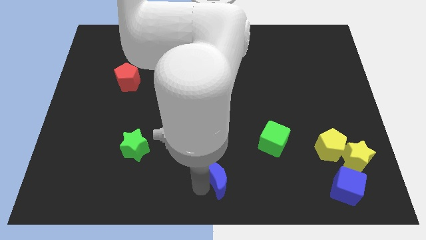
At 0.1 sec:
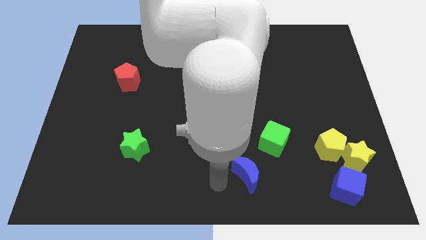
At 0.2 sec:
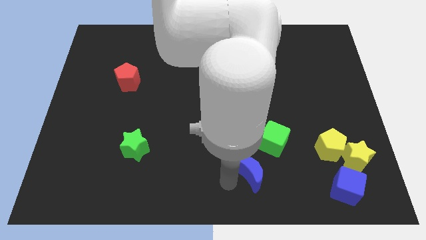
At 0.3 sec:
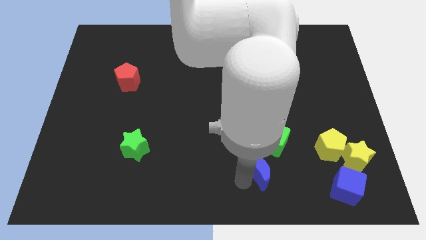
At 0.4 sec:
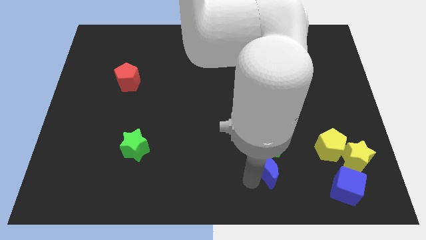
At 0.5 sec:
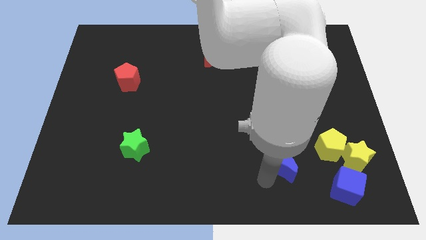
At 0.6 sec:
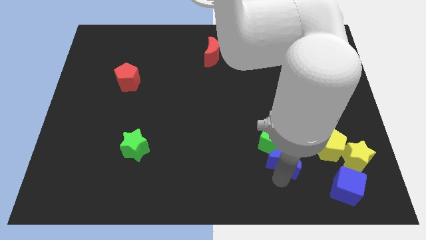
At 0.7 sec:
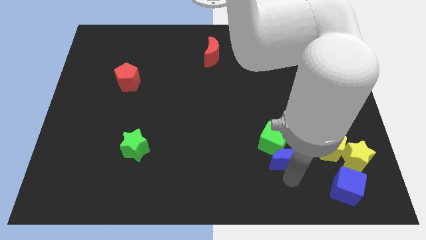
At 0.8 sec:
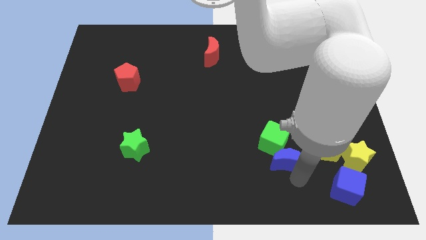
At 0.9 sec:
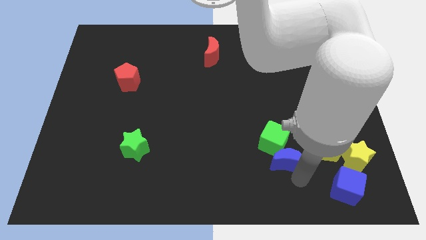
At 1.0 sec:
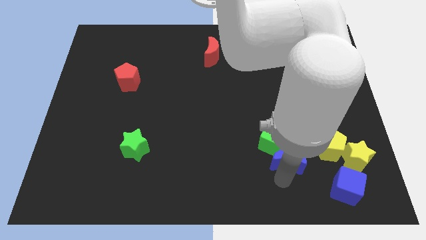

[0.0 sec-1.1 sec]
place the blue crescent below the green cube

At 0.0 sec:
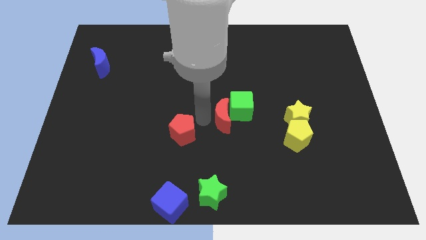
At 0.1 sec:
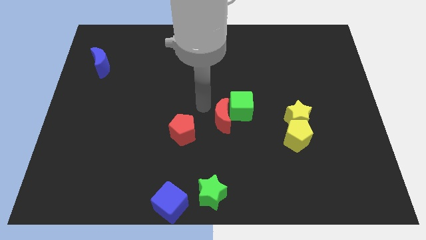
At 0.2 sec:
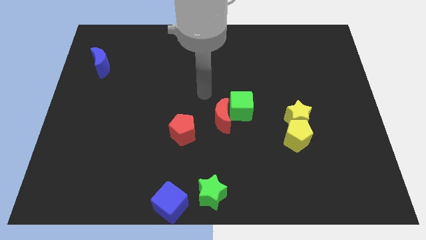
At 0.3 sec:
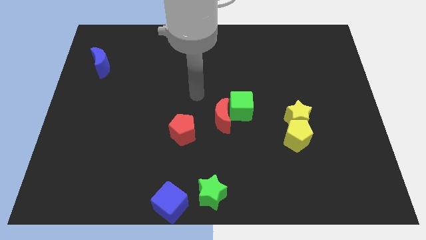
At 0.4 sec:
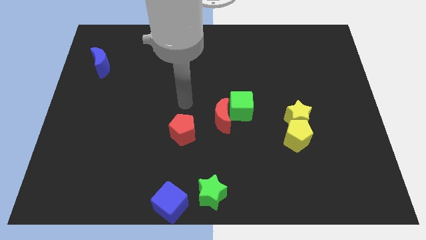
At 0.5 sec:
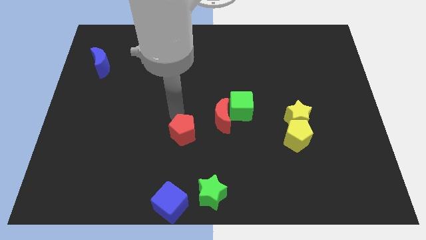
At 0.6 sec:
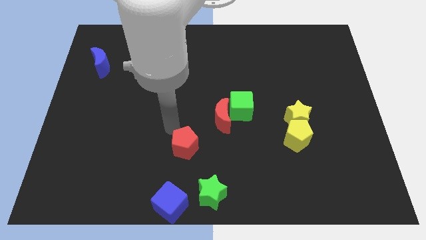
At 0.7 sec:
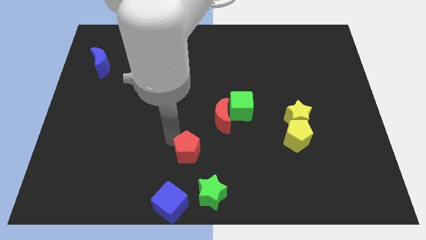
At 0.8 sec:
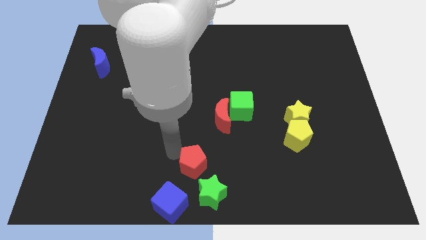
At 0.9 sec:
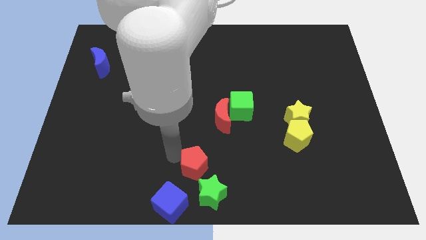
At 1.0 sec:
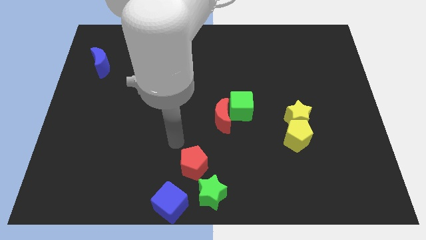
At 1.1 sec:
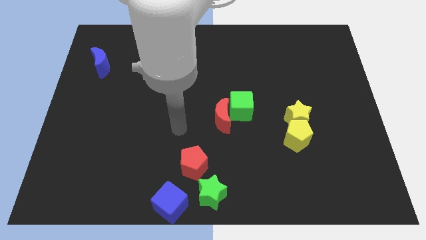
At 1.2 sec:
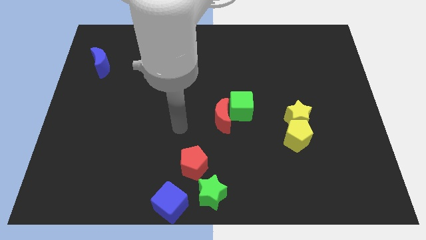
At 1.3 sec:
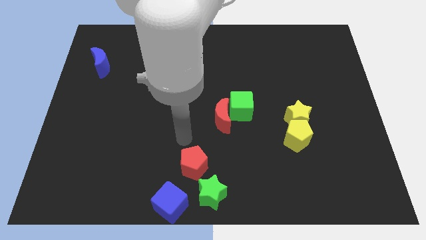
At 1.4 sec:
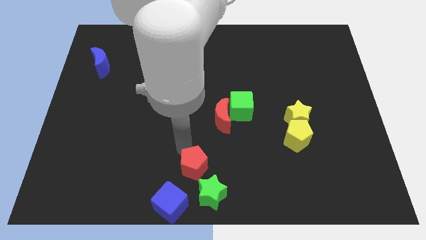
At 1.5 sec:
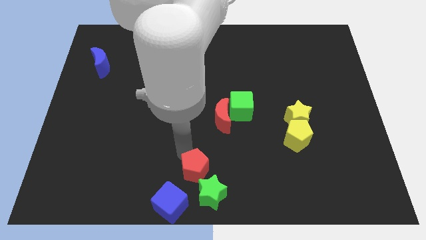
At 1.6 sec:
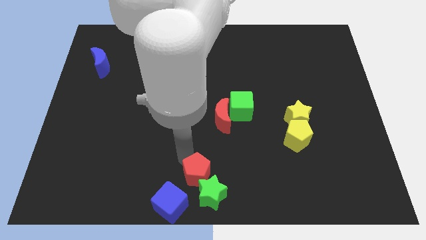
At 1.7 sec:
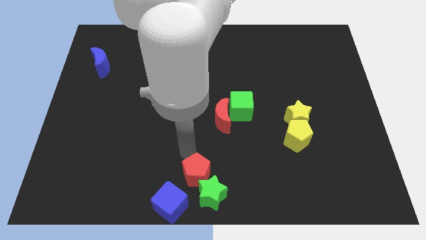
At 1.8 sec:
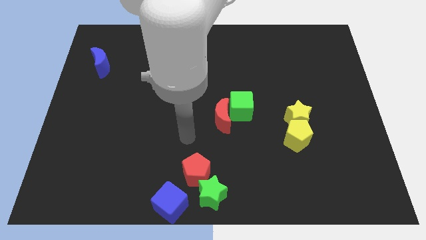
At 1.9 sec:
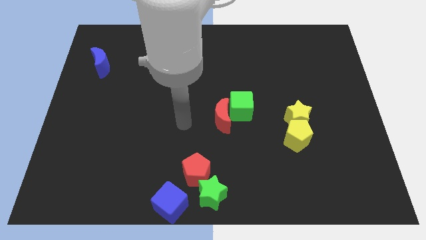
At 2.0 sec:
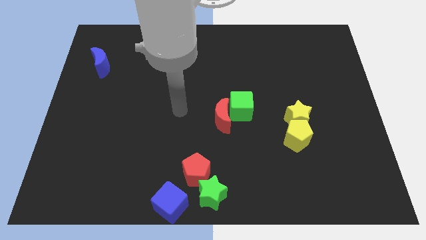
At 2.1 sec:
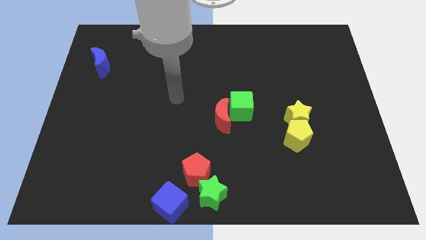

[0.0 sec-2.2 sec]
move the red pentagon above the green star

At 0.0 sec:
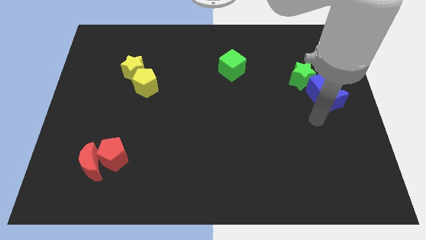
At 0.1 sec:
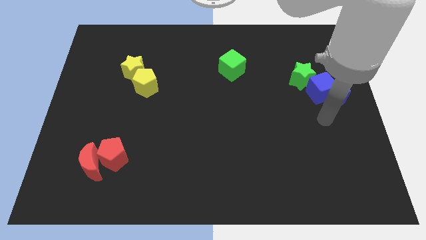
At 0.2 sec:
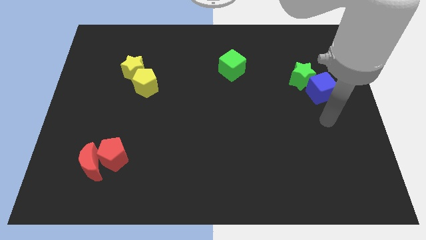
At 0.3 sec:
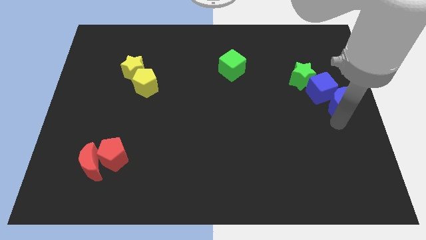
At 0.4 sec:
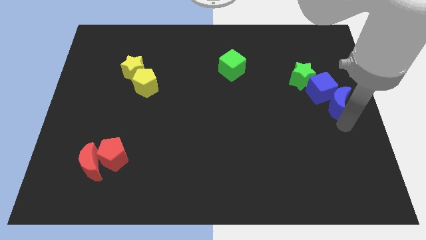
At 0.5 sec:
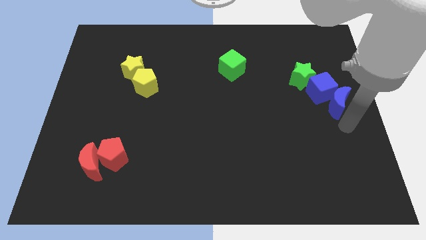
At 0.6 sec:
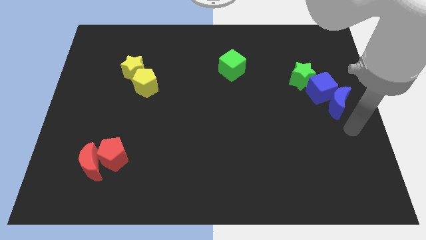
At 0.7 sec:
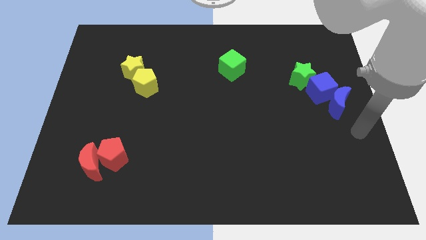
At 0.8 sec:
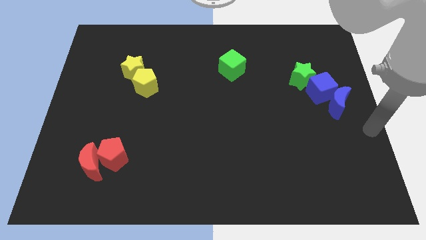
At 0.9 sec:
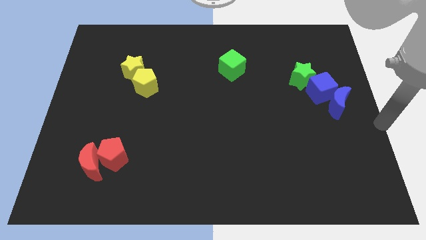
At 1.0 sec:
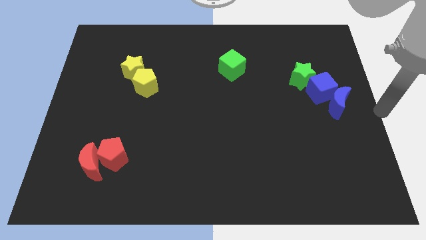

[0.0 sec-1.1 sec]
slide the blue moon to the bottom right side of the blue cube

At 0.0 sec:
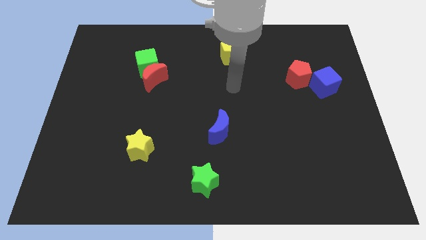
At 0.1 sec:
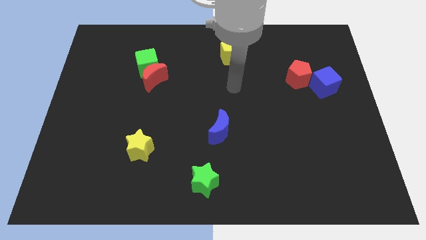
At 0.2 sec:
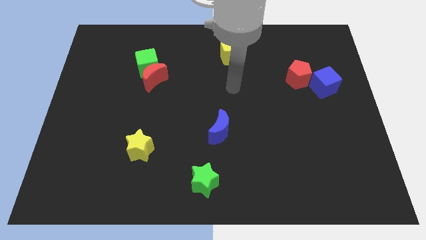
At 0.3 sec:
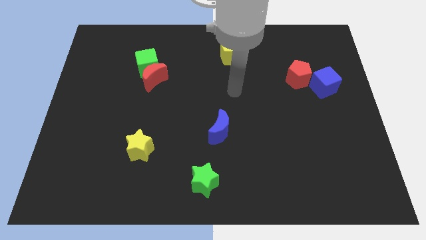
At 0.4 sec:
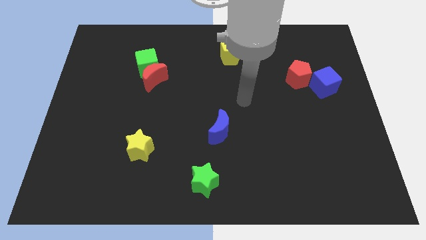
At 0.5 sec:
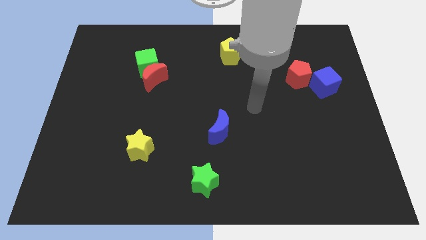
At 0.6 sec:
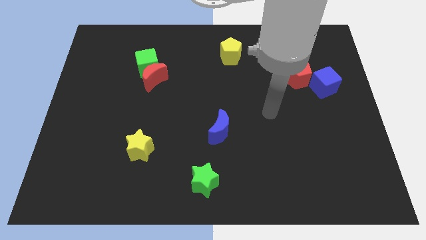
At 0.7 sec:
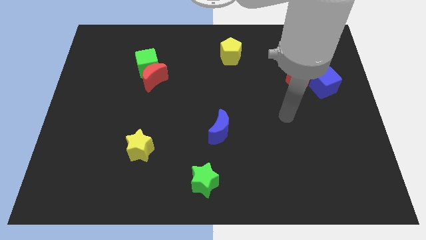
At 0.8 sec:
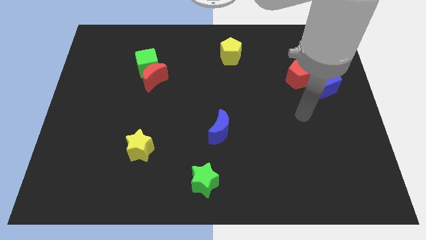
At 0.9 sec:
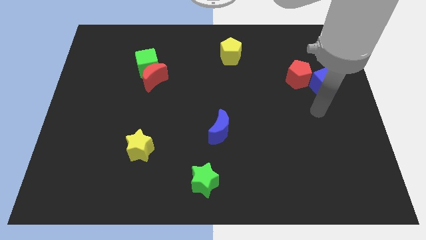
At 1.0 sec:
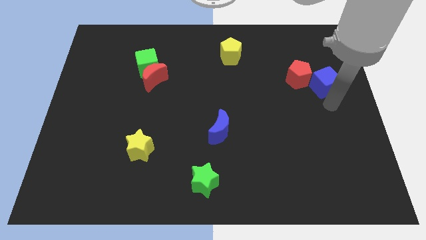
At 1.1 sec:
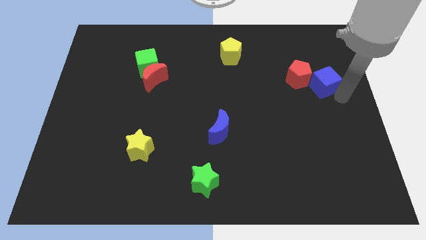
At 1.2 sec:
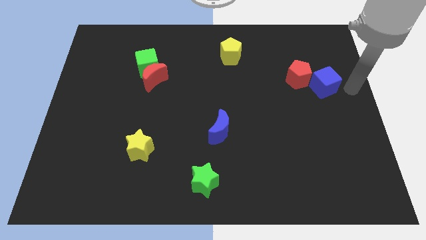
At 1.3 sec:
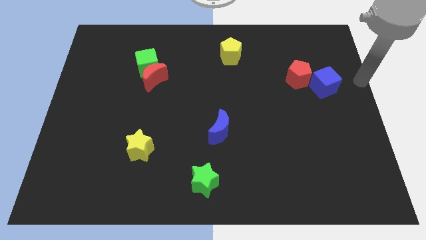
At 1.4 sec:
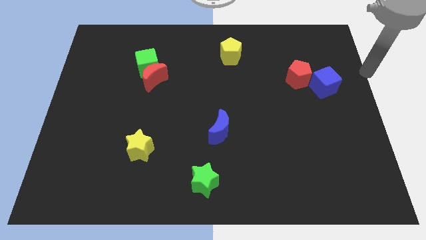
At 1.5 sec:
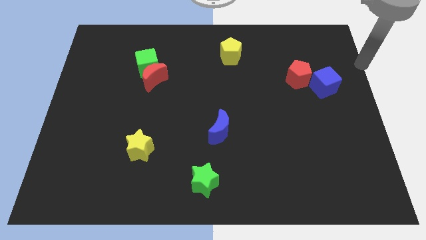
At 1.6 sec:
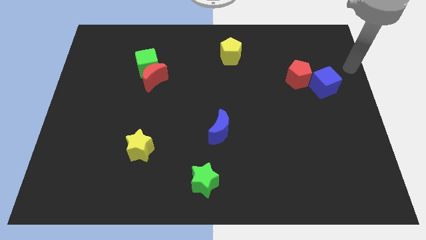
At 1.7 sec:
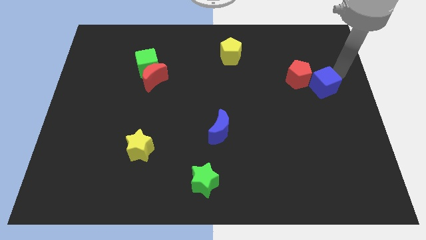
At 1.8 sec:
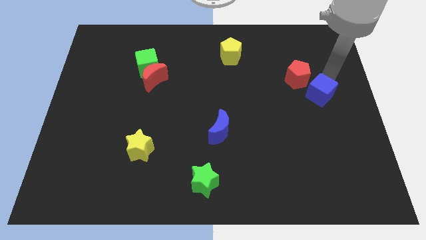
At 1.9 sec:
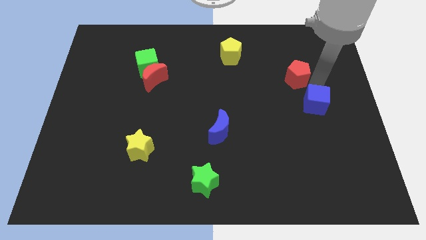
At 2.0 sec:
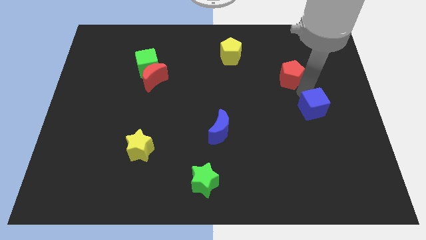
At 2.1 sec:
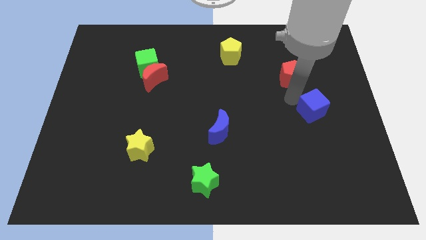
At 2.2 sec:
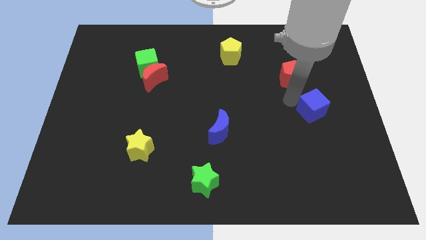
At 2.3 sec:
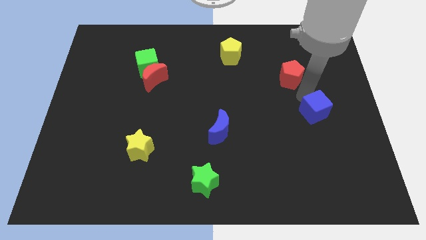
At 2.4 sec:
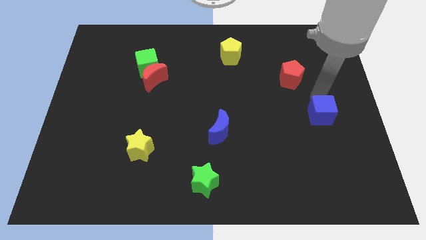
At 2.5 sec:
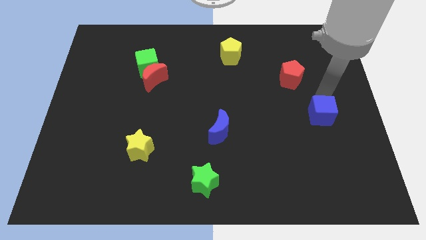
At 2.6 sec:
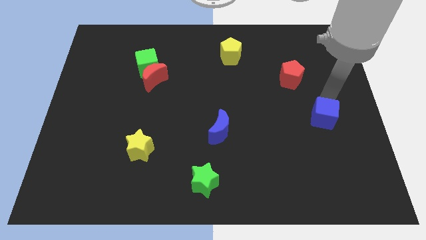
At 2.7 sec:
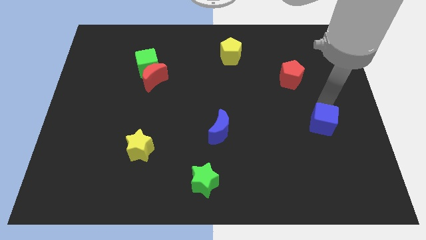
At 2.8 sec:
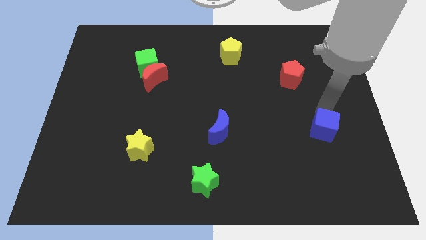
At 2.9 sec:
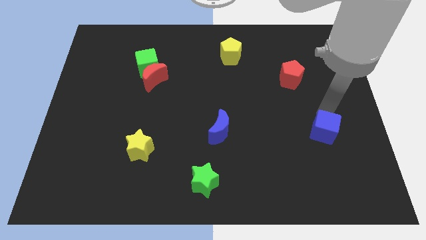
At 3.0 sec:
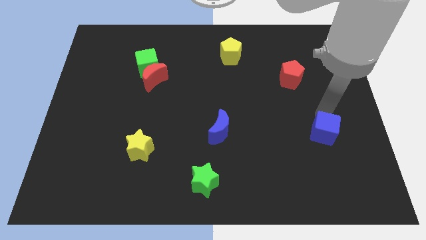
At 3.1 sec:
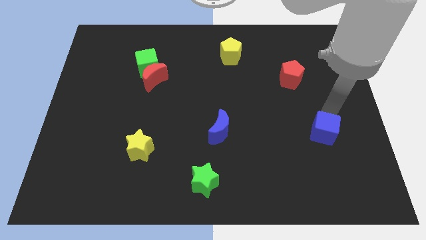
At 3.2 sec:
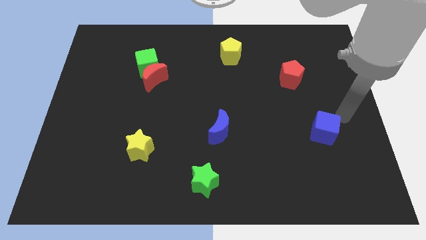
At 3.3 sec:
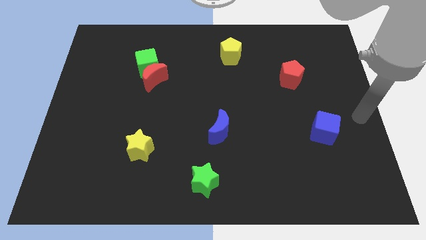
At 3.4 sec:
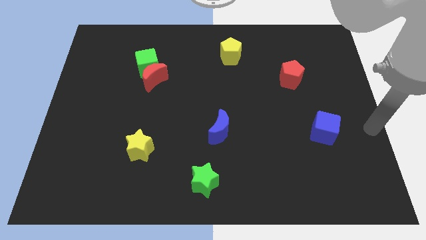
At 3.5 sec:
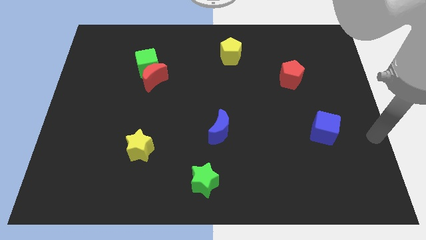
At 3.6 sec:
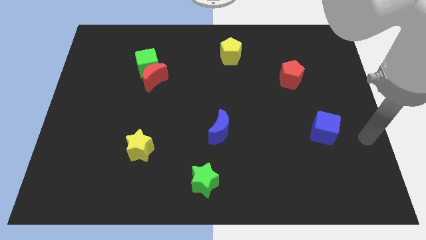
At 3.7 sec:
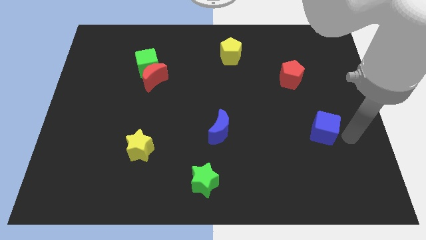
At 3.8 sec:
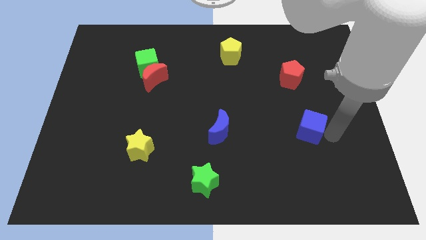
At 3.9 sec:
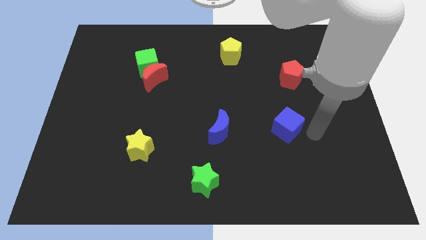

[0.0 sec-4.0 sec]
place blue cube vertical to red pentagon

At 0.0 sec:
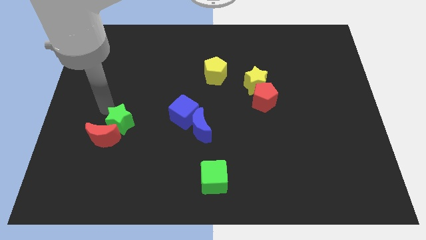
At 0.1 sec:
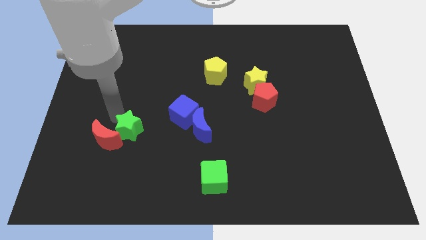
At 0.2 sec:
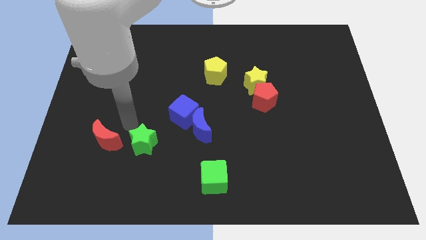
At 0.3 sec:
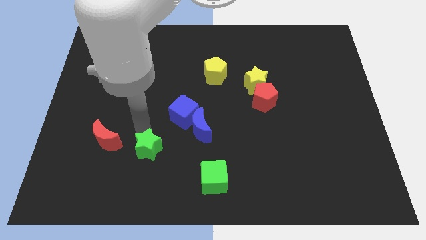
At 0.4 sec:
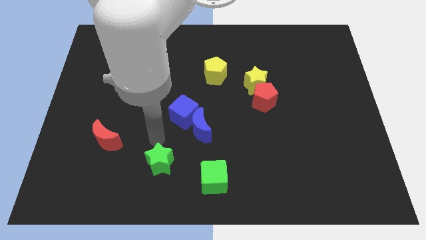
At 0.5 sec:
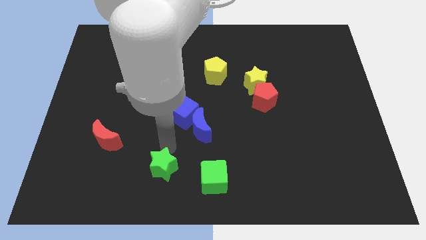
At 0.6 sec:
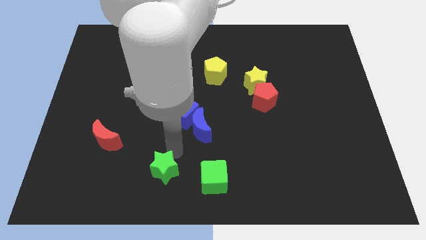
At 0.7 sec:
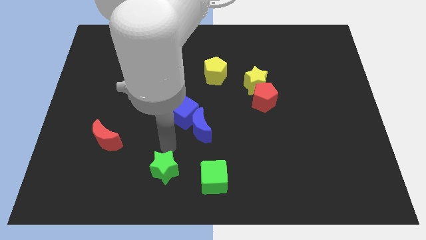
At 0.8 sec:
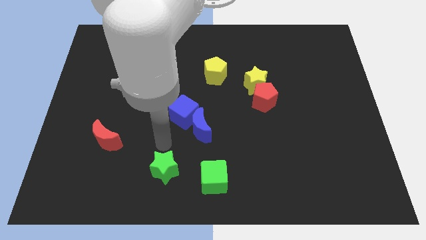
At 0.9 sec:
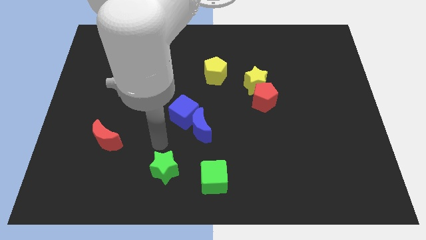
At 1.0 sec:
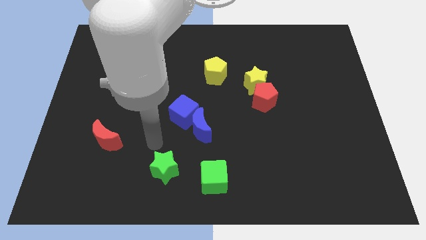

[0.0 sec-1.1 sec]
separate the green star and red crescent
